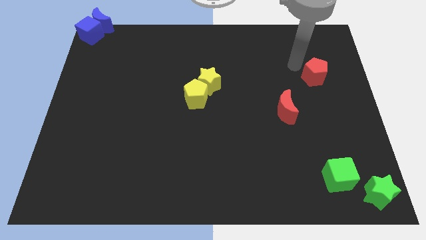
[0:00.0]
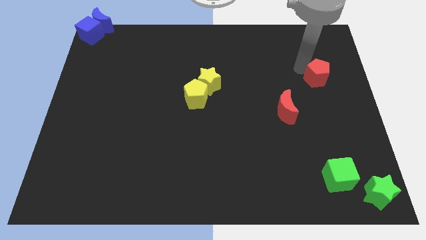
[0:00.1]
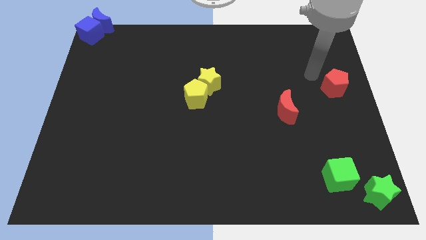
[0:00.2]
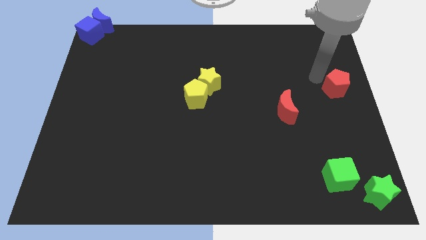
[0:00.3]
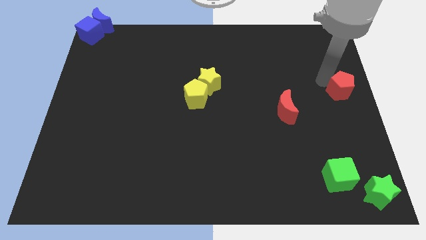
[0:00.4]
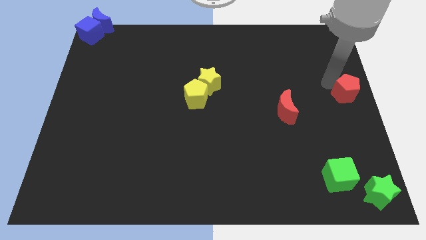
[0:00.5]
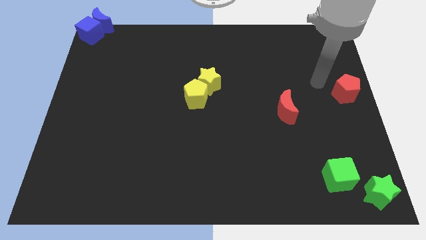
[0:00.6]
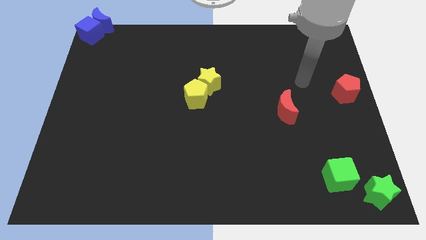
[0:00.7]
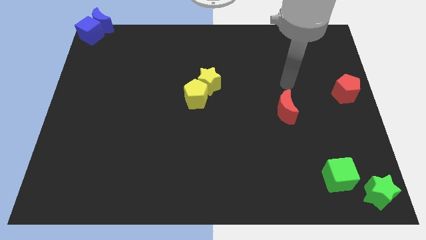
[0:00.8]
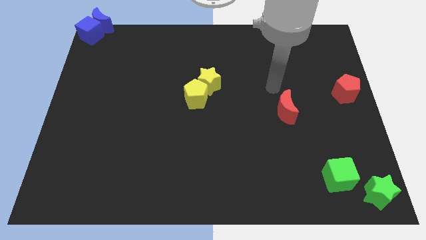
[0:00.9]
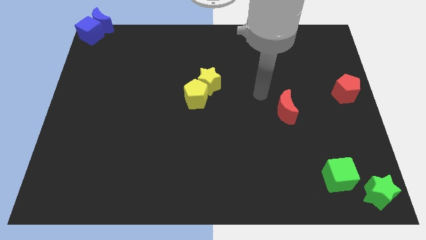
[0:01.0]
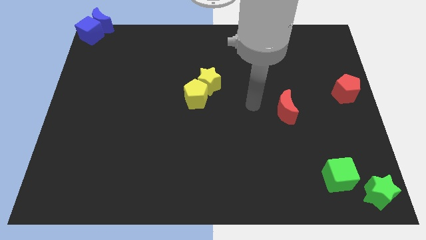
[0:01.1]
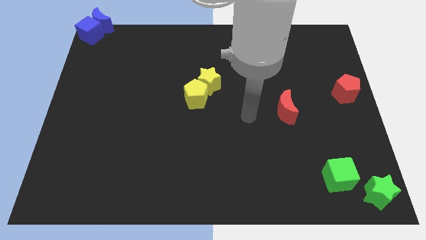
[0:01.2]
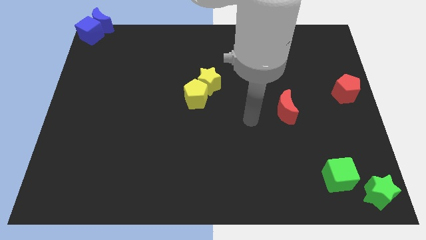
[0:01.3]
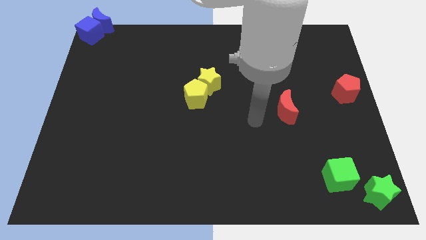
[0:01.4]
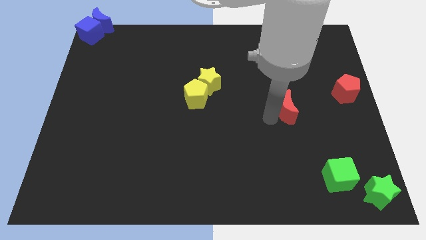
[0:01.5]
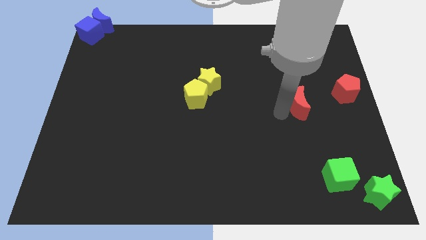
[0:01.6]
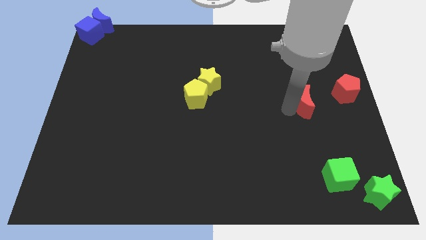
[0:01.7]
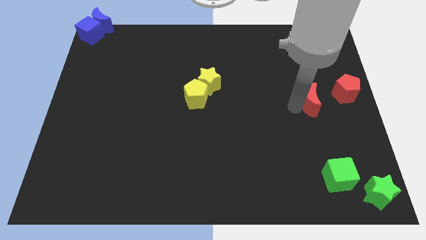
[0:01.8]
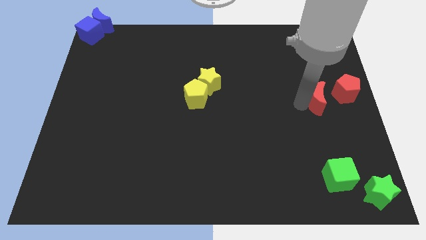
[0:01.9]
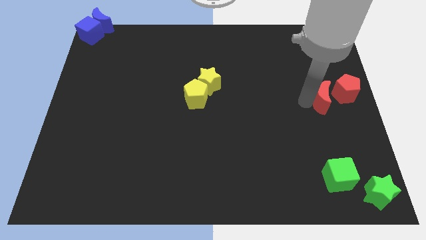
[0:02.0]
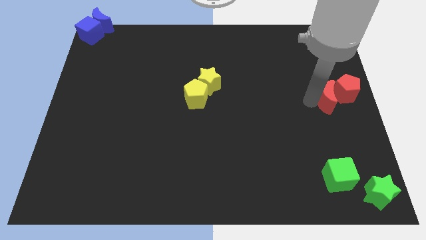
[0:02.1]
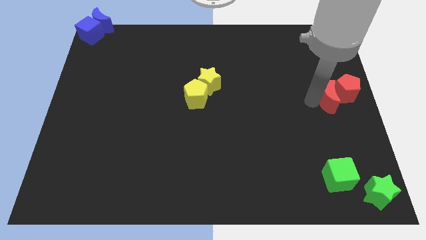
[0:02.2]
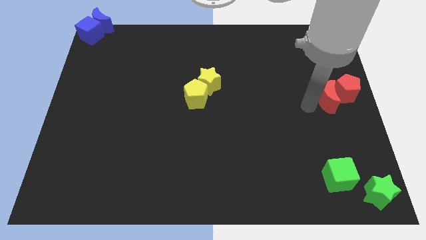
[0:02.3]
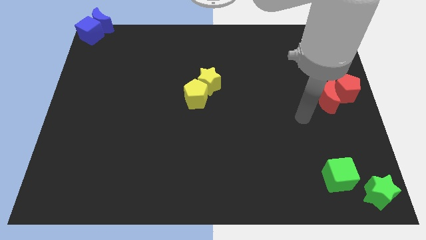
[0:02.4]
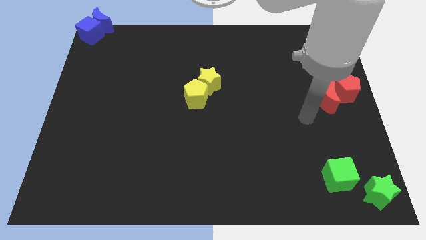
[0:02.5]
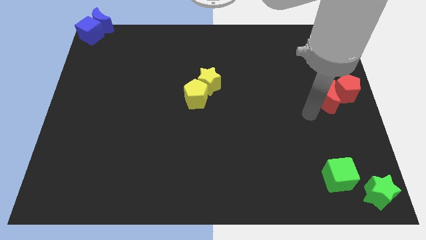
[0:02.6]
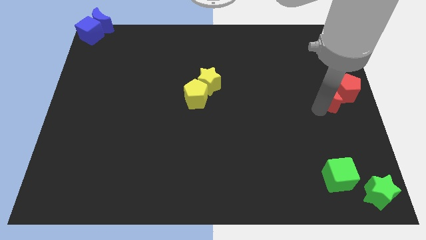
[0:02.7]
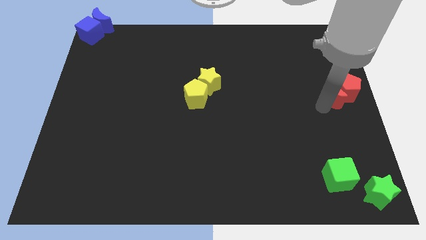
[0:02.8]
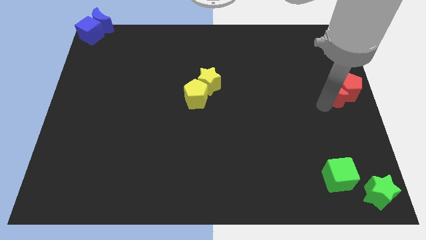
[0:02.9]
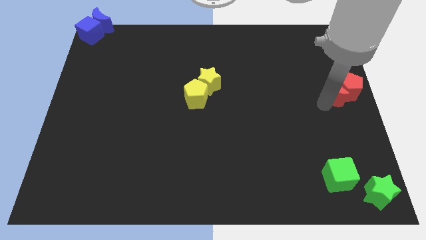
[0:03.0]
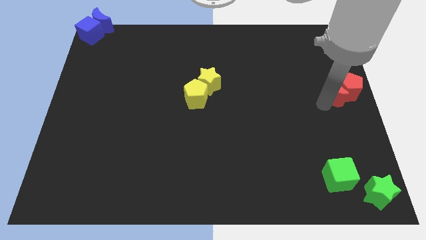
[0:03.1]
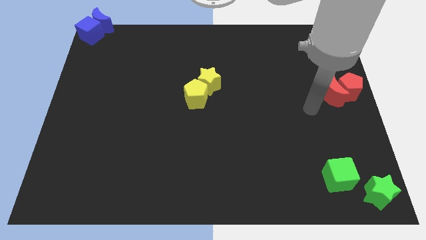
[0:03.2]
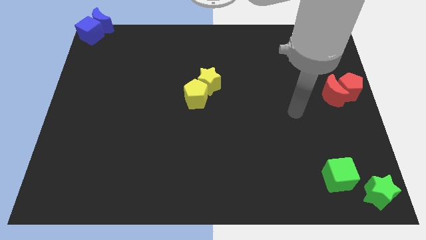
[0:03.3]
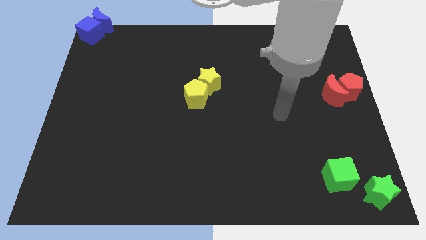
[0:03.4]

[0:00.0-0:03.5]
move red moon into red pentagon

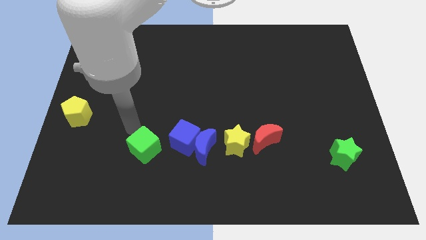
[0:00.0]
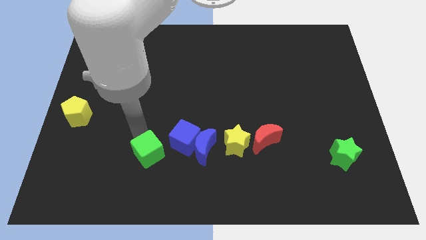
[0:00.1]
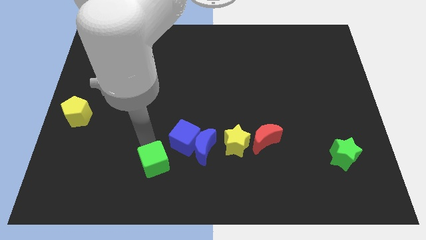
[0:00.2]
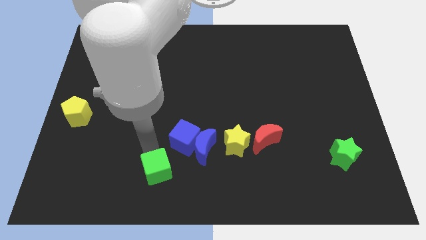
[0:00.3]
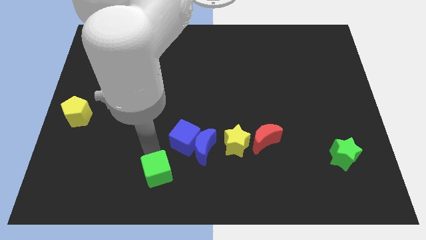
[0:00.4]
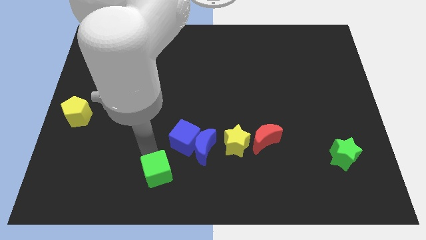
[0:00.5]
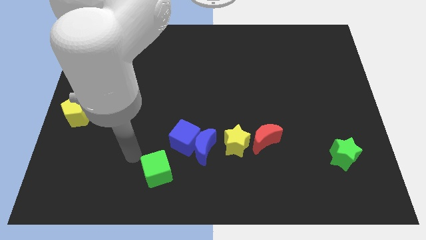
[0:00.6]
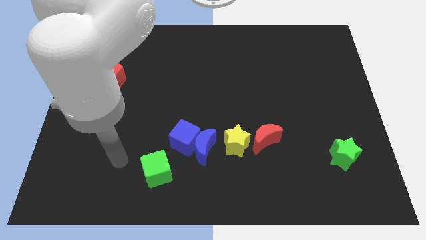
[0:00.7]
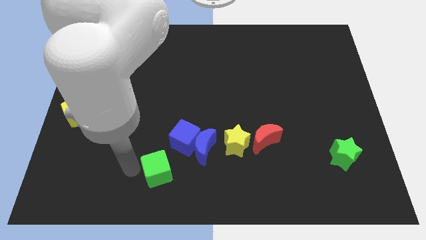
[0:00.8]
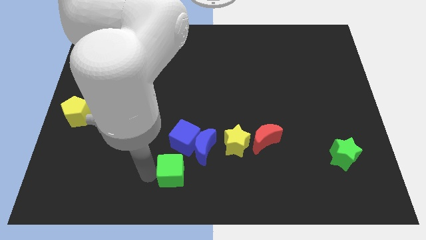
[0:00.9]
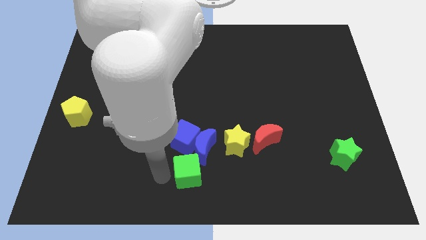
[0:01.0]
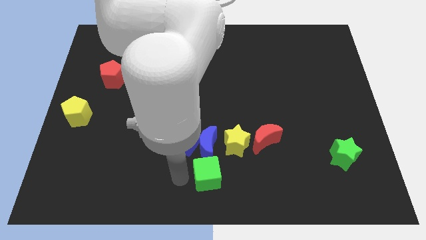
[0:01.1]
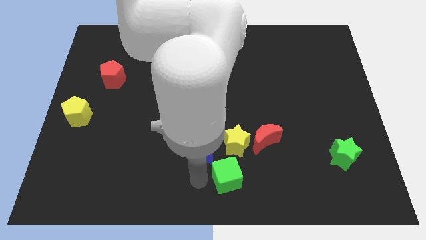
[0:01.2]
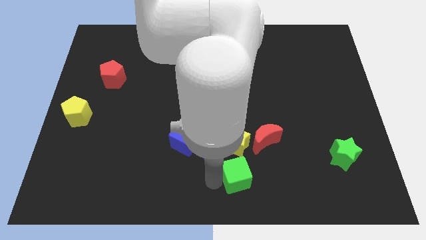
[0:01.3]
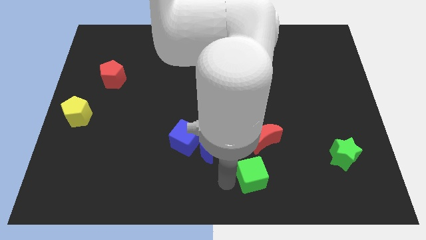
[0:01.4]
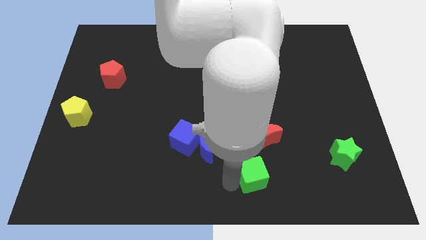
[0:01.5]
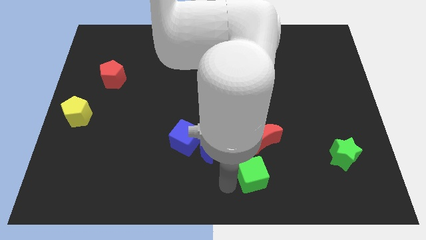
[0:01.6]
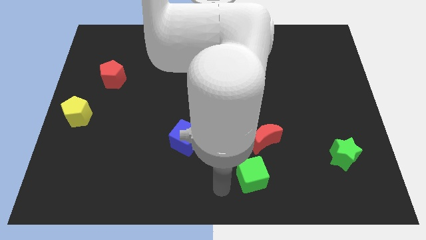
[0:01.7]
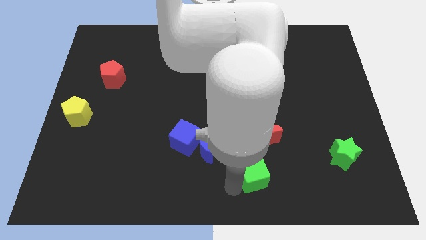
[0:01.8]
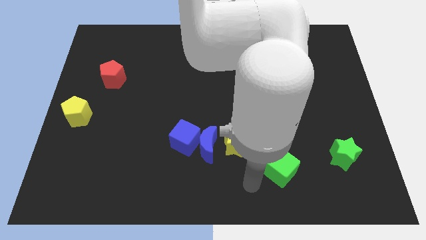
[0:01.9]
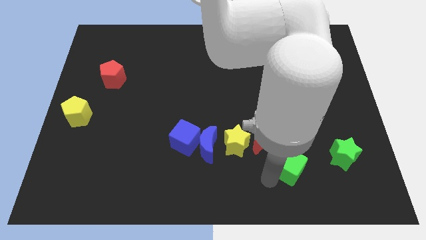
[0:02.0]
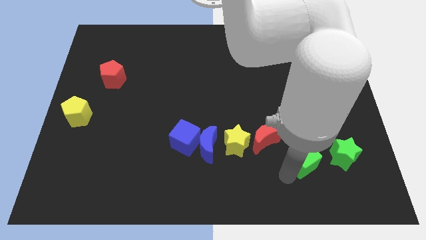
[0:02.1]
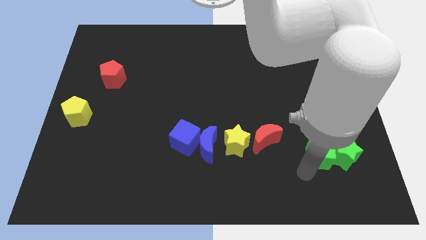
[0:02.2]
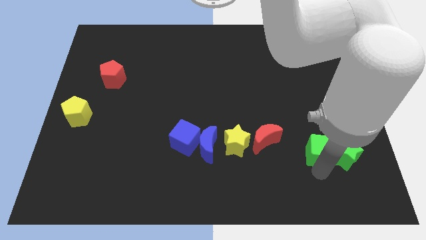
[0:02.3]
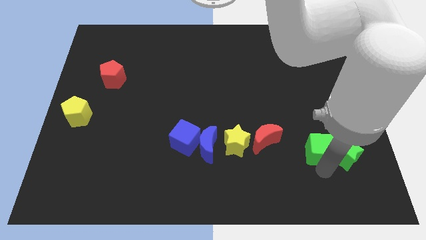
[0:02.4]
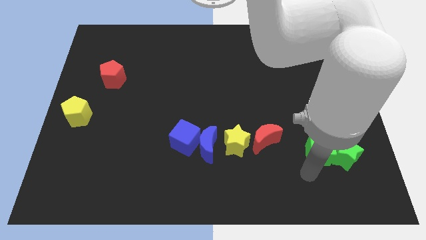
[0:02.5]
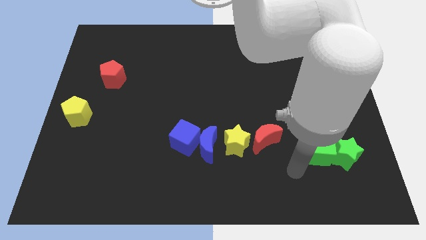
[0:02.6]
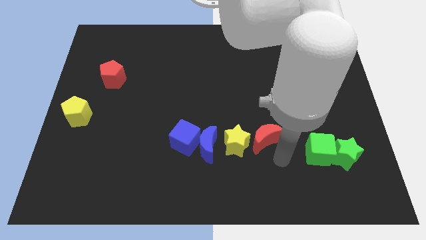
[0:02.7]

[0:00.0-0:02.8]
push the green cube to the left of green star

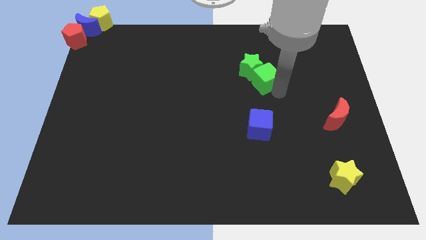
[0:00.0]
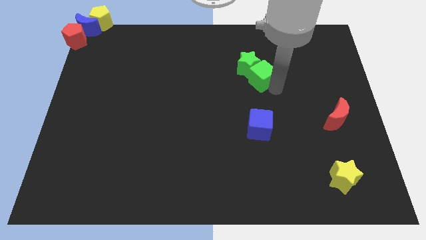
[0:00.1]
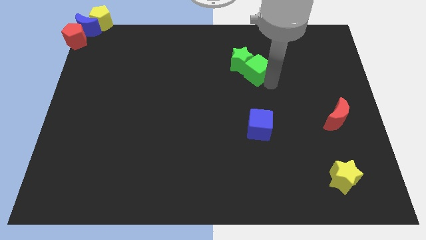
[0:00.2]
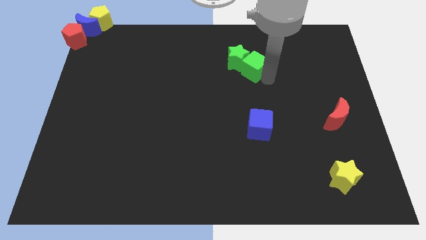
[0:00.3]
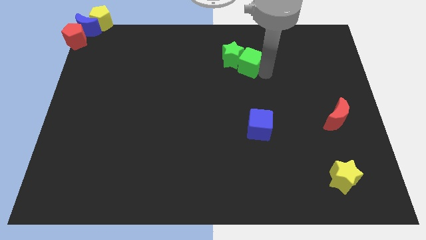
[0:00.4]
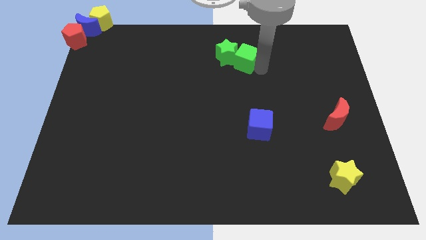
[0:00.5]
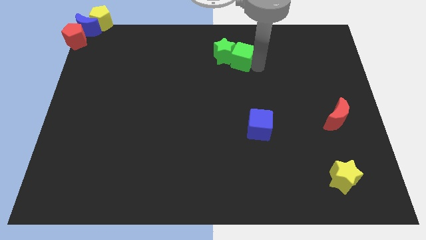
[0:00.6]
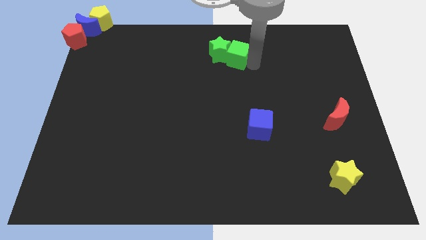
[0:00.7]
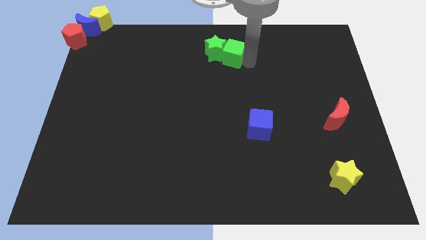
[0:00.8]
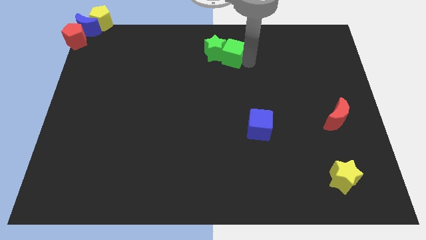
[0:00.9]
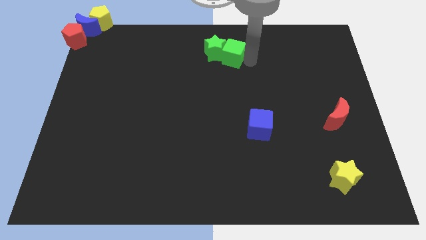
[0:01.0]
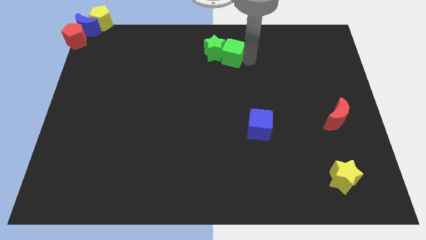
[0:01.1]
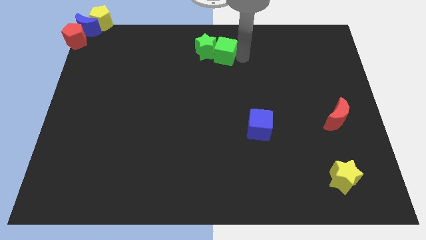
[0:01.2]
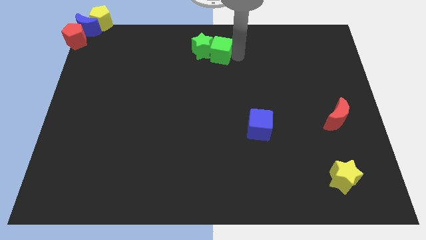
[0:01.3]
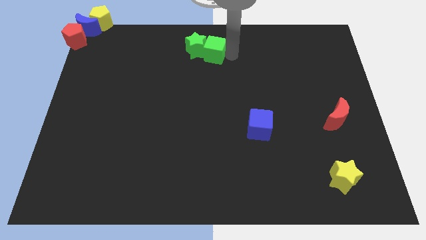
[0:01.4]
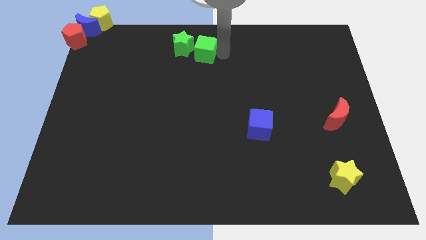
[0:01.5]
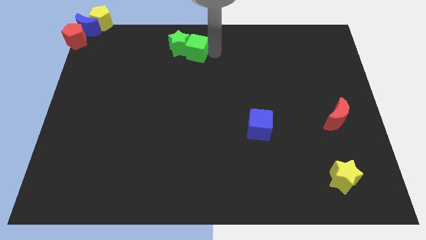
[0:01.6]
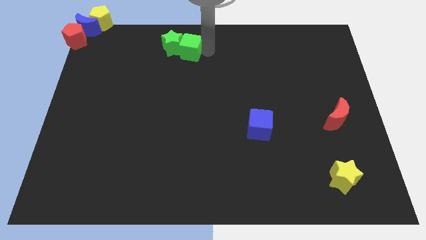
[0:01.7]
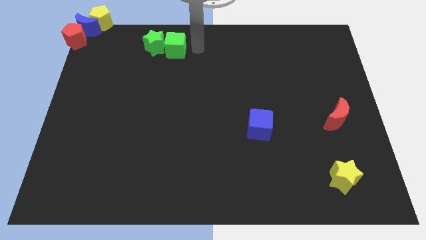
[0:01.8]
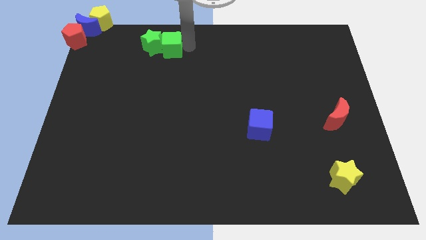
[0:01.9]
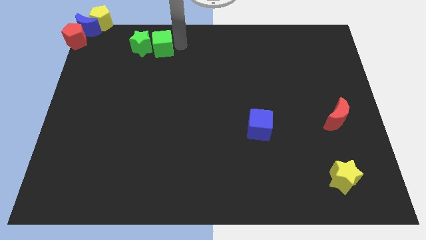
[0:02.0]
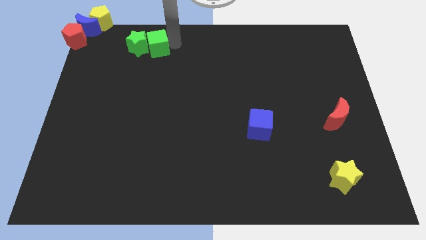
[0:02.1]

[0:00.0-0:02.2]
move the green blocks towards top left side of the board

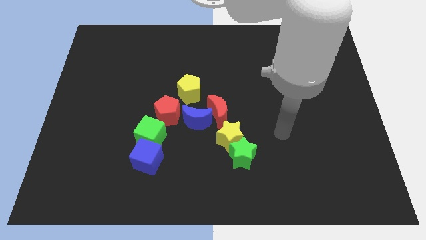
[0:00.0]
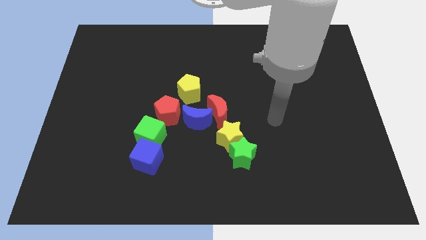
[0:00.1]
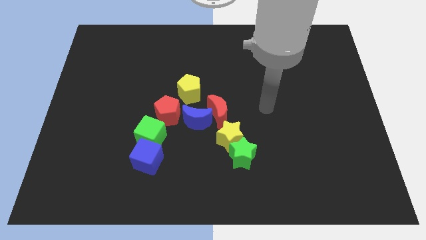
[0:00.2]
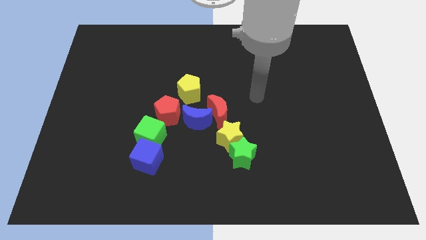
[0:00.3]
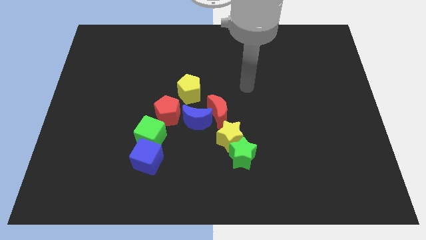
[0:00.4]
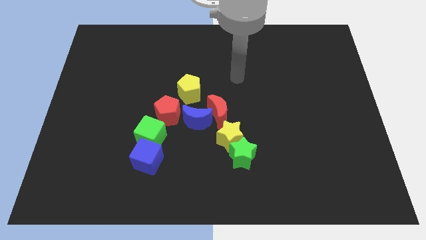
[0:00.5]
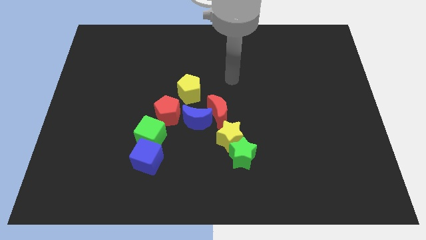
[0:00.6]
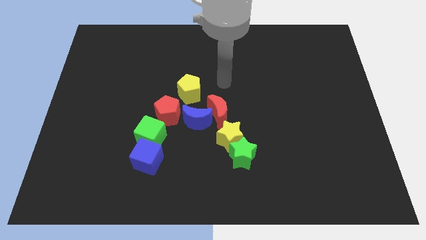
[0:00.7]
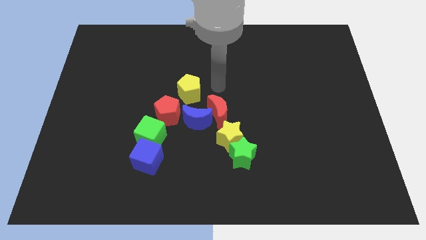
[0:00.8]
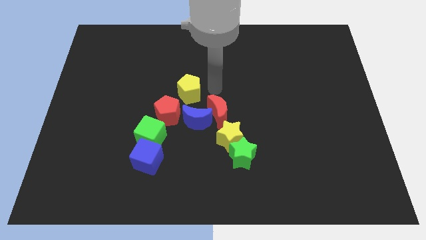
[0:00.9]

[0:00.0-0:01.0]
point your arm at the top of the red crescent
